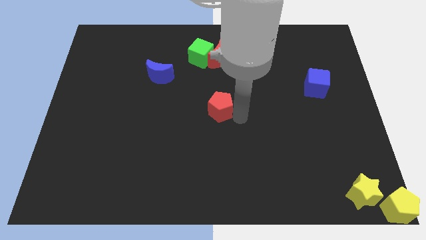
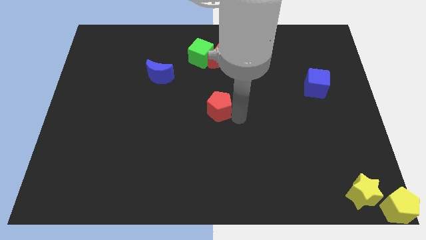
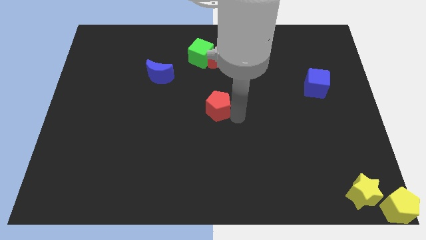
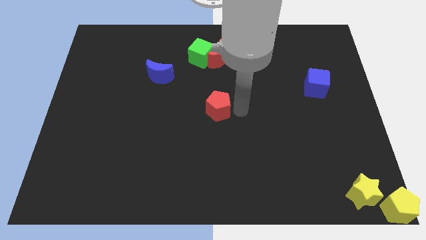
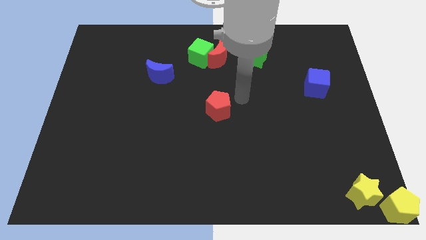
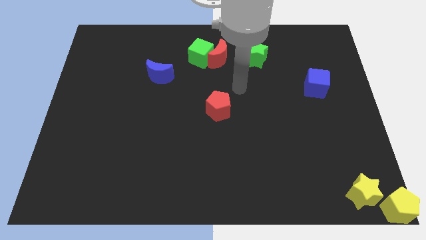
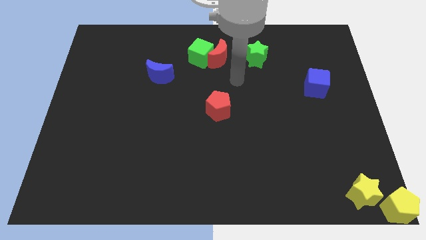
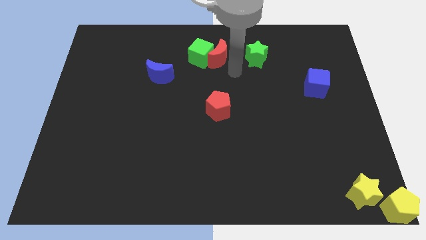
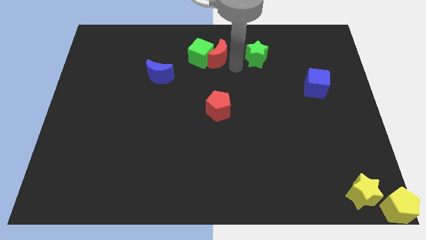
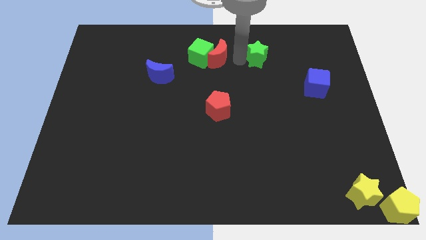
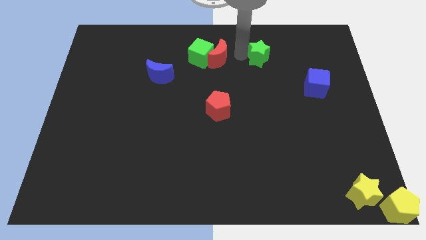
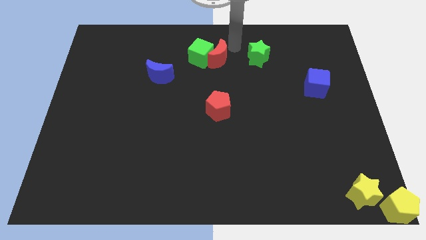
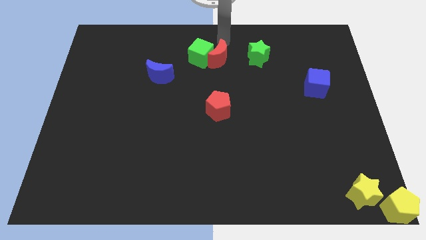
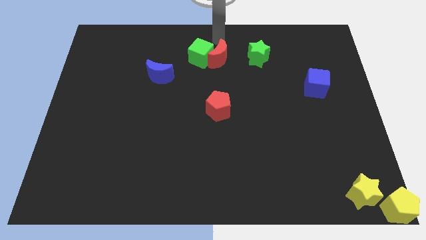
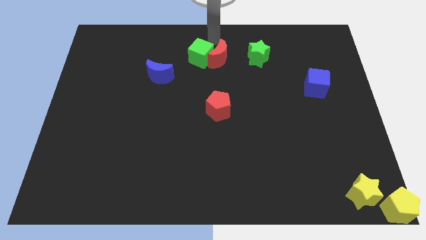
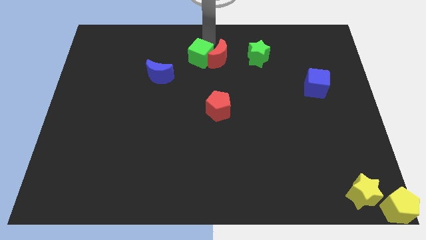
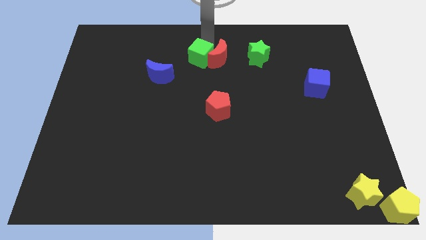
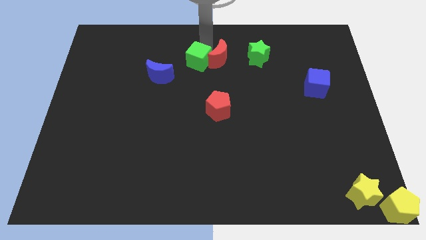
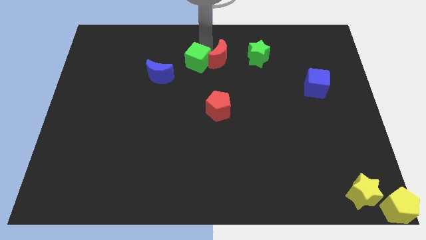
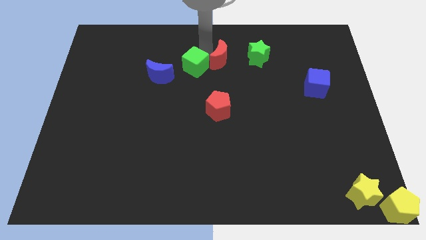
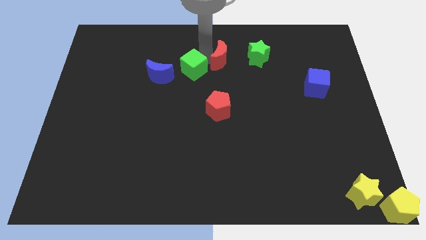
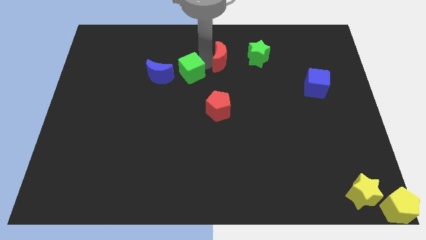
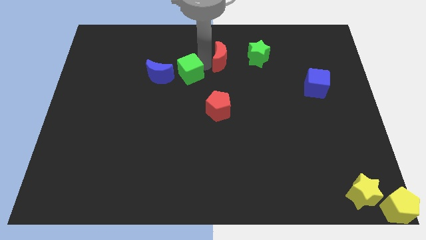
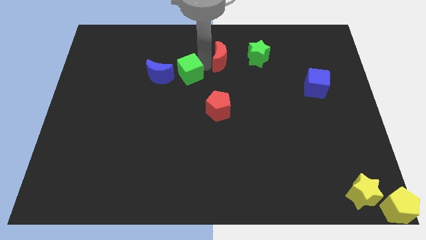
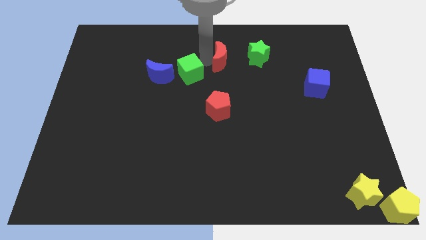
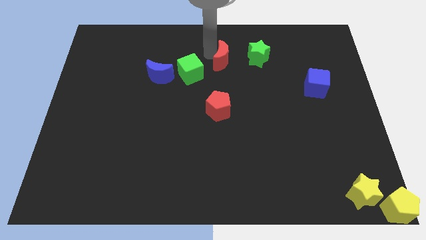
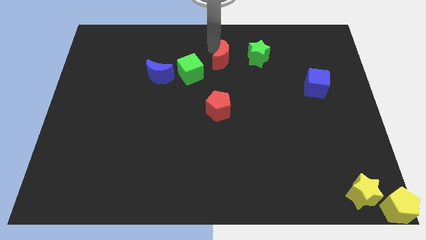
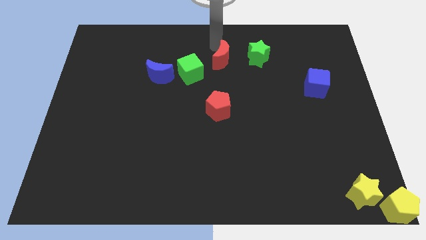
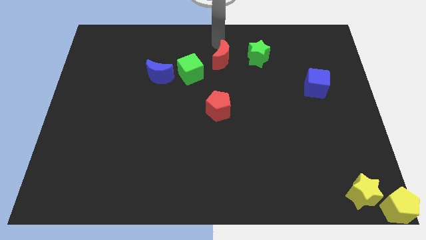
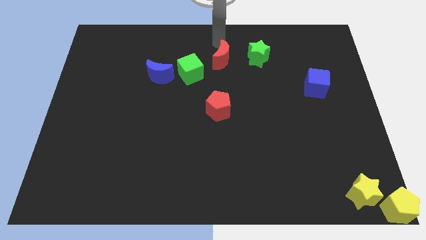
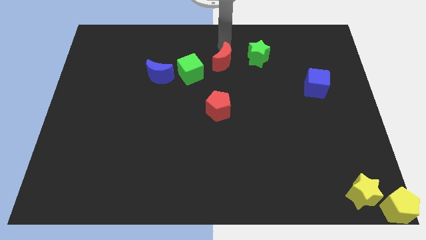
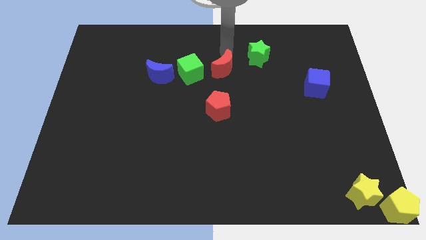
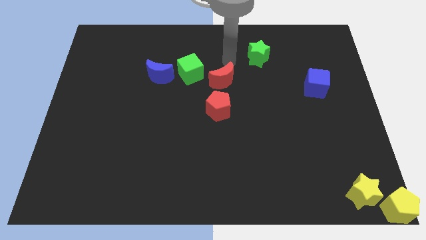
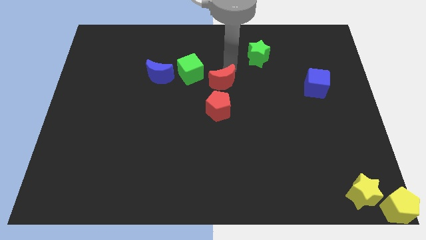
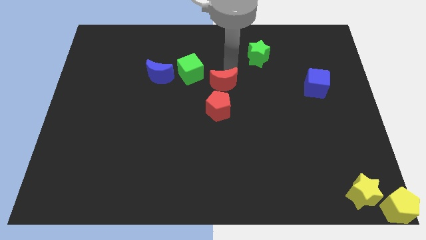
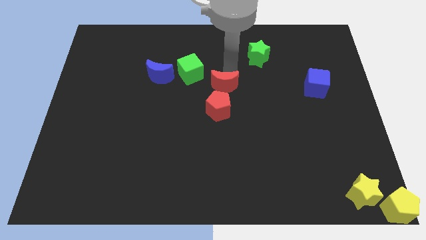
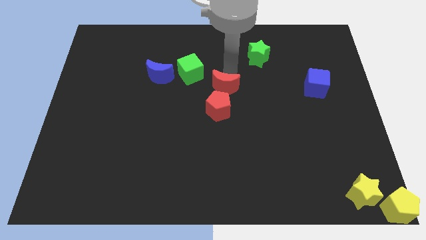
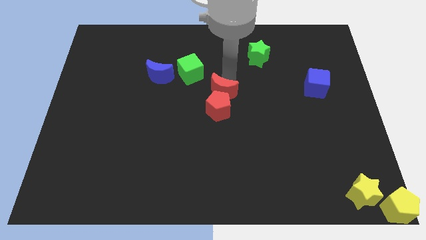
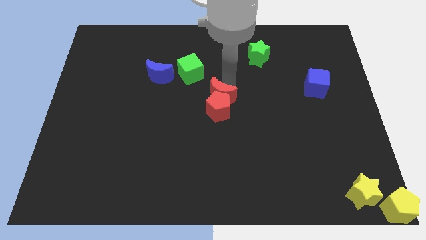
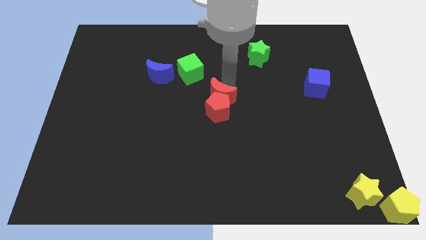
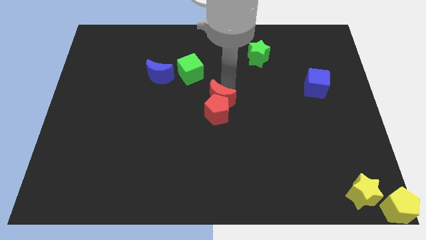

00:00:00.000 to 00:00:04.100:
push the red moon into the red pentagon

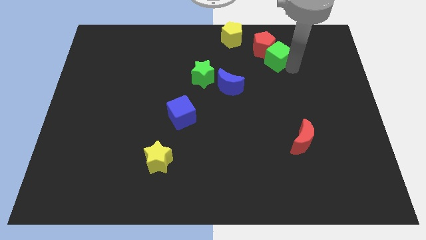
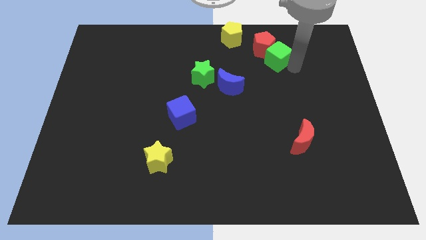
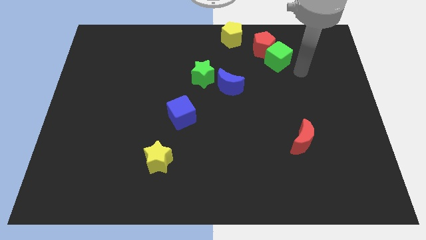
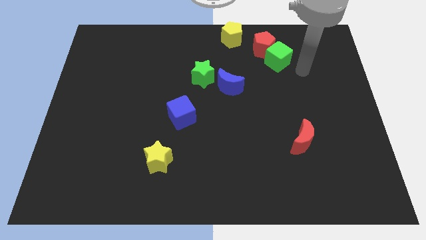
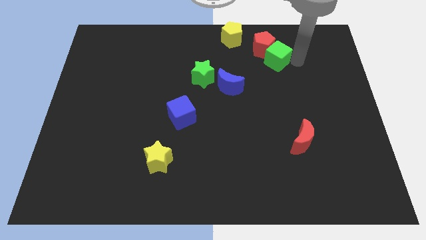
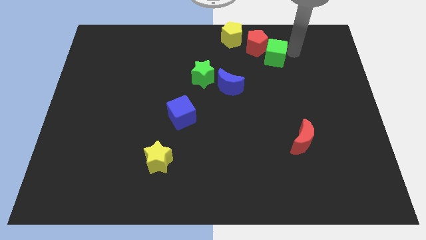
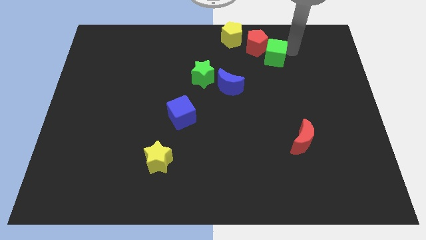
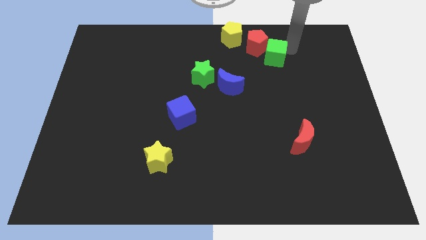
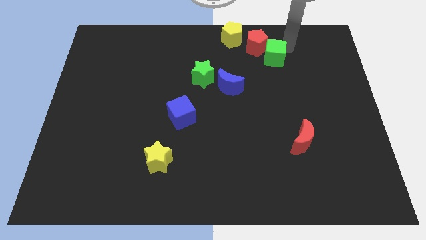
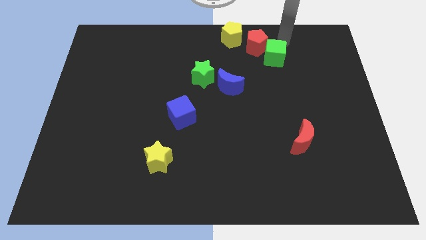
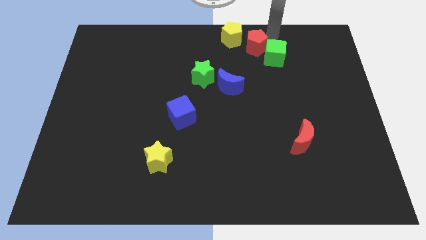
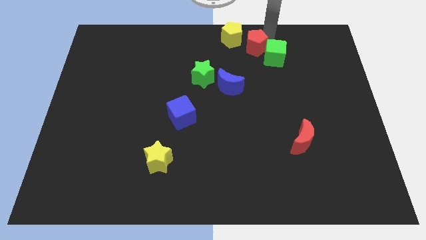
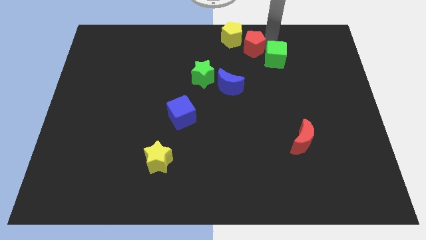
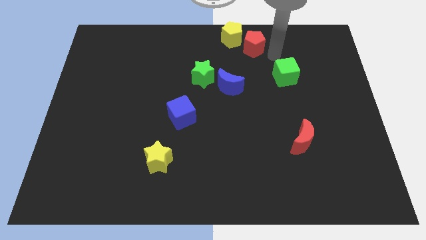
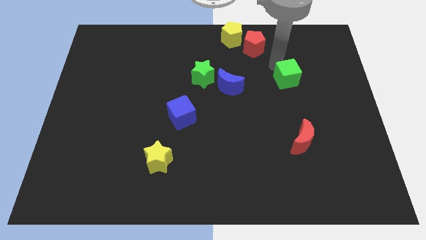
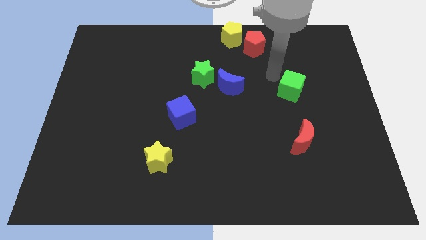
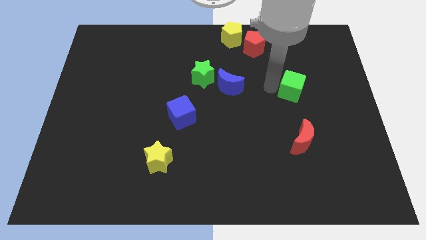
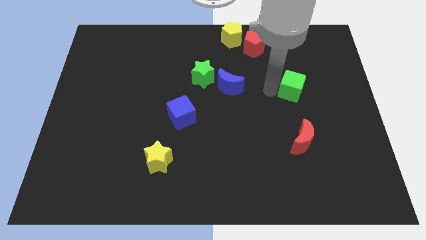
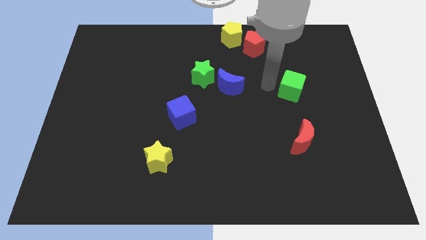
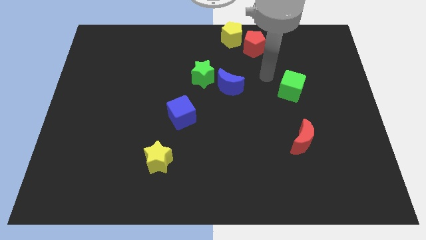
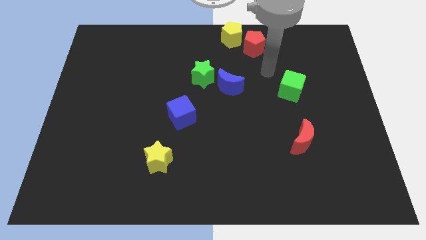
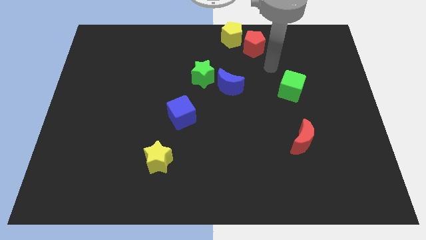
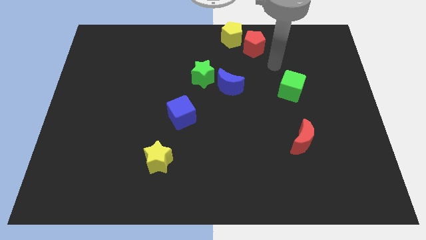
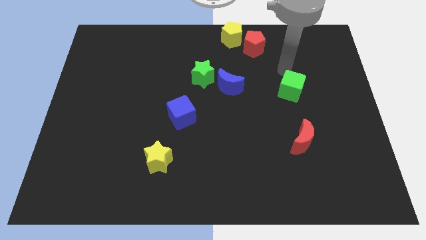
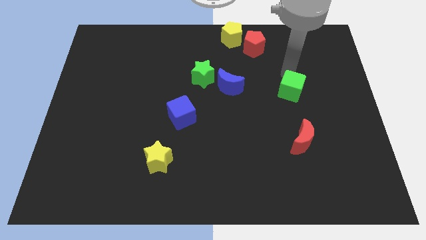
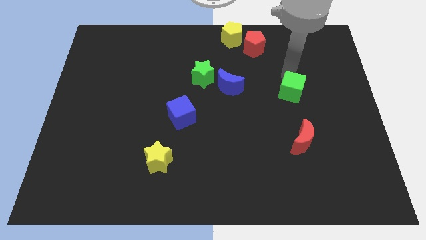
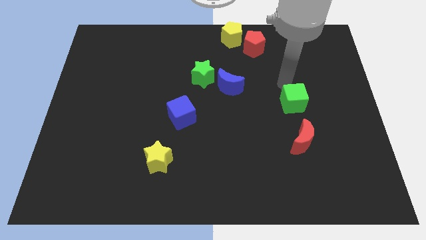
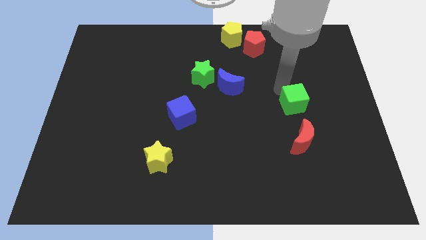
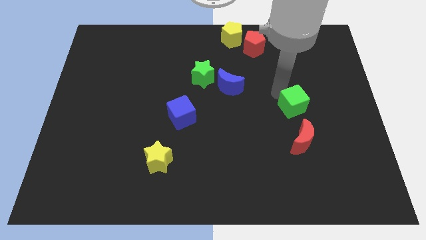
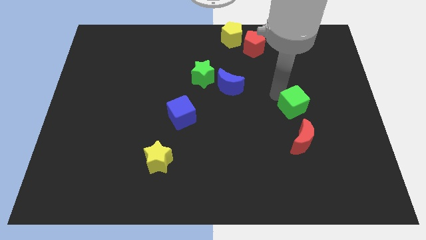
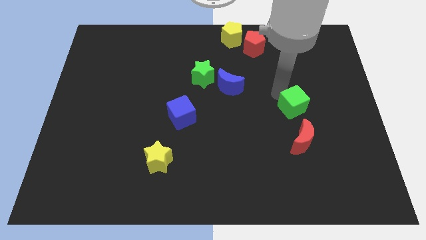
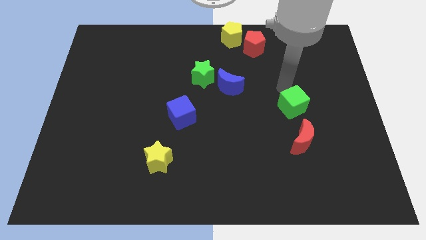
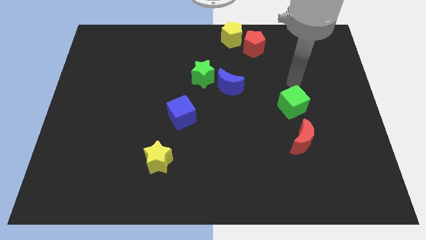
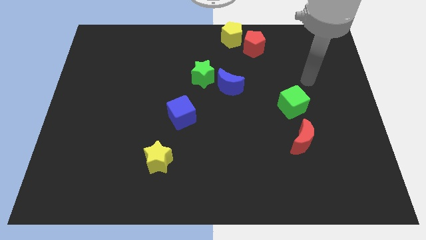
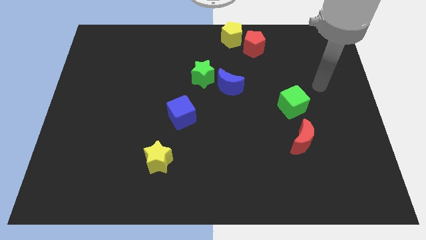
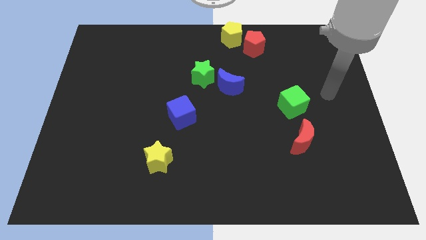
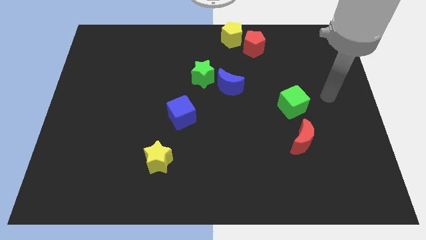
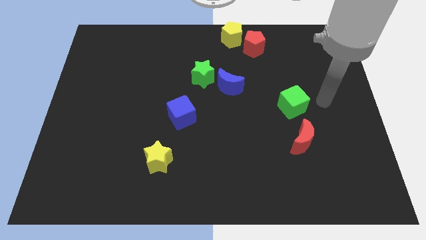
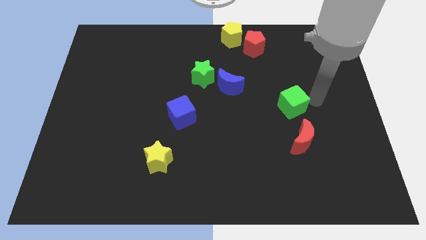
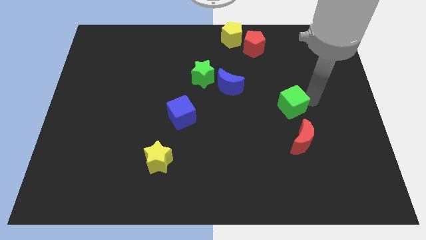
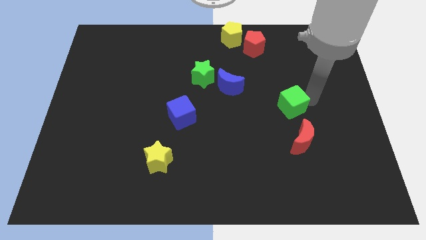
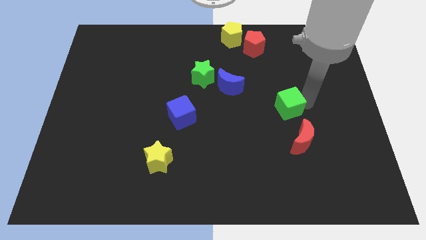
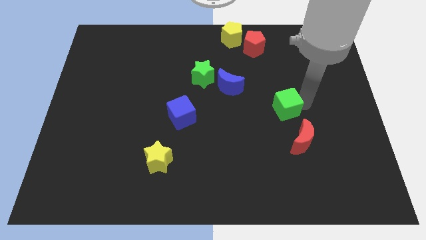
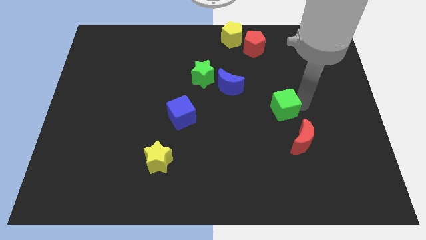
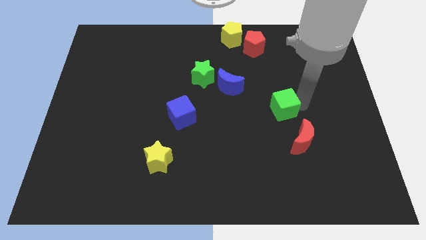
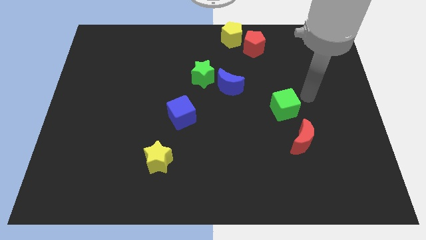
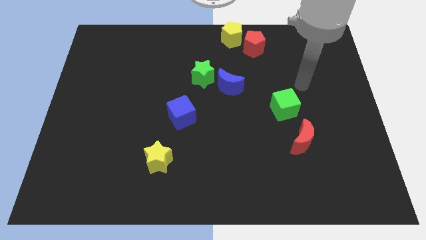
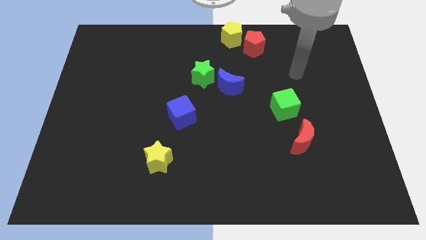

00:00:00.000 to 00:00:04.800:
separate green cube from the red pentagon
